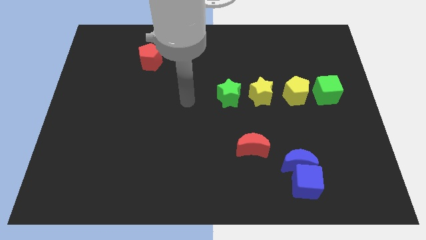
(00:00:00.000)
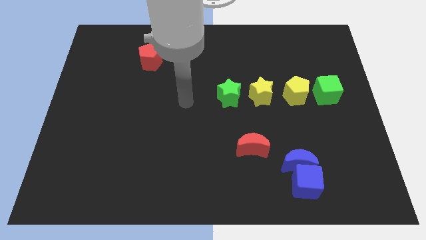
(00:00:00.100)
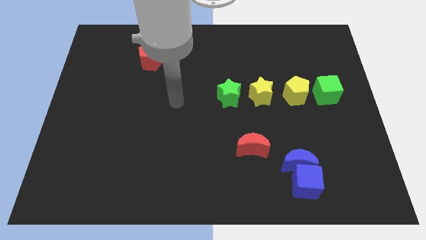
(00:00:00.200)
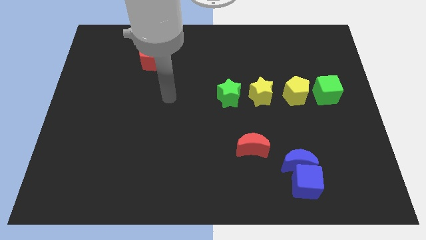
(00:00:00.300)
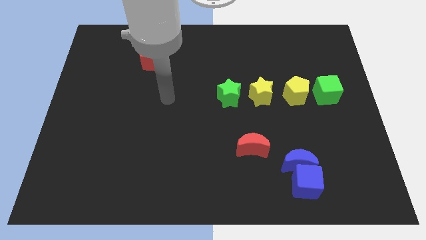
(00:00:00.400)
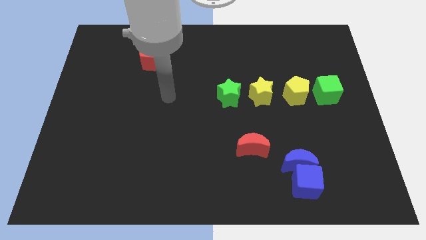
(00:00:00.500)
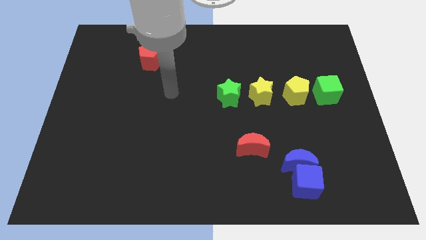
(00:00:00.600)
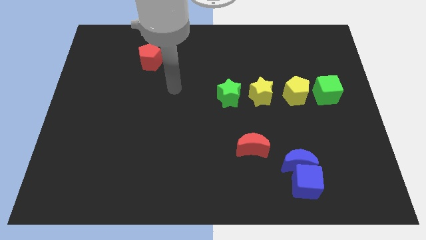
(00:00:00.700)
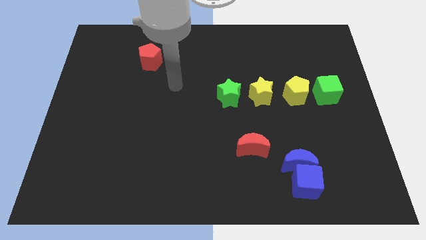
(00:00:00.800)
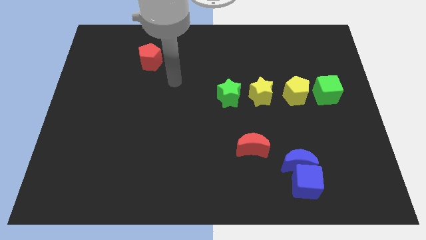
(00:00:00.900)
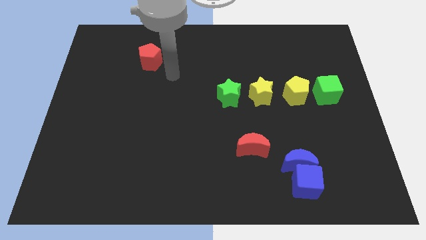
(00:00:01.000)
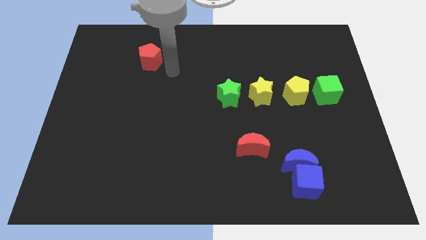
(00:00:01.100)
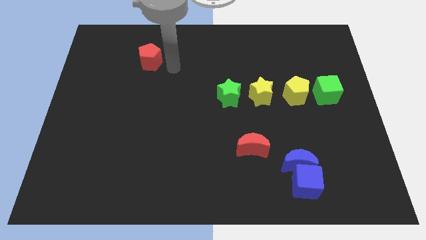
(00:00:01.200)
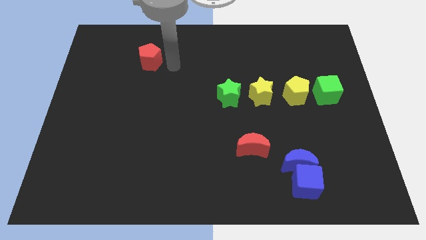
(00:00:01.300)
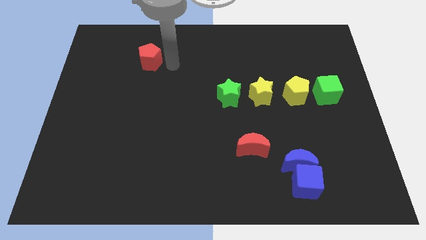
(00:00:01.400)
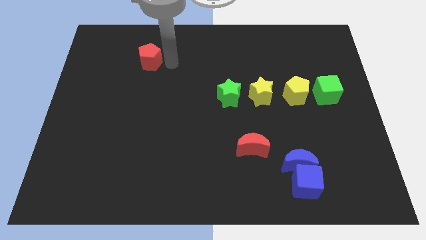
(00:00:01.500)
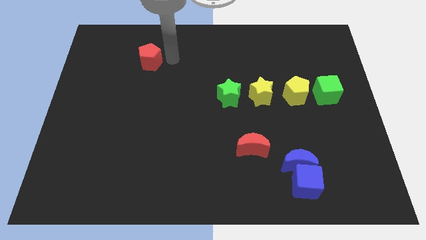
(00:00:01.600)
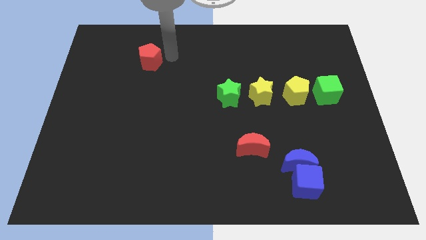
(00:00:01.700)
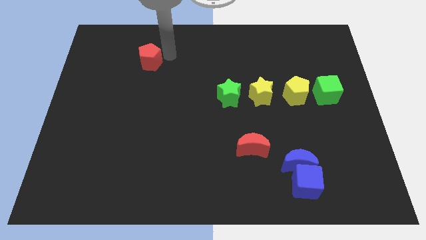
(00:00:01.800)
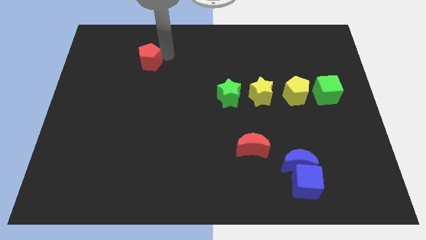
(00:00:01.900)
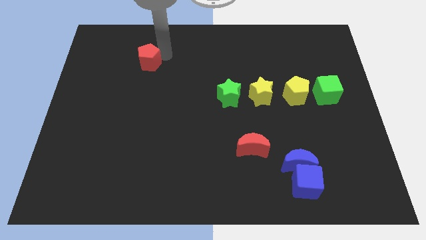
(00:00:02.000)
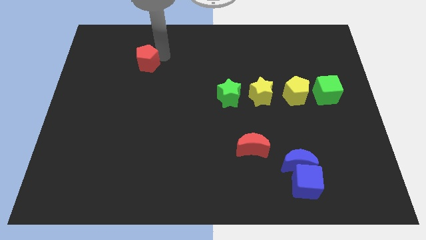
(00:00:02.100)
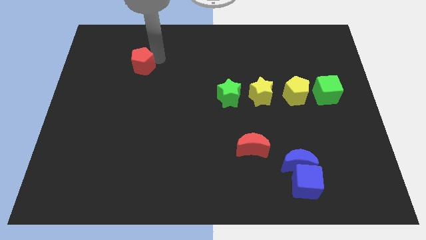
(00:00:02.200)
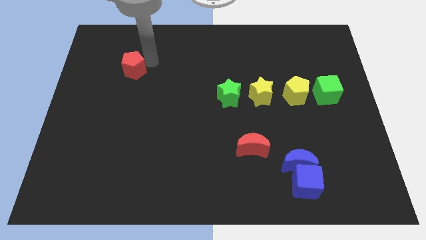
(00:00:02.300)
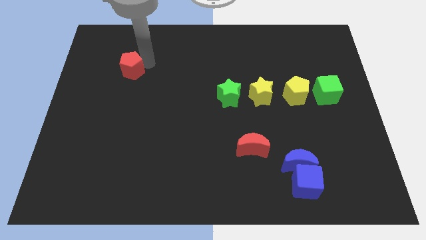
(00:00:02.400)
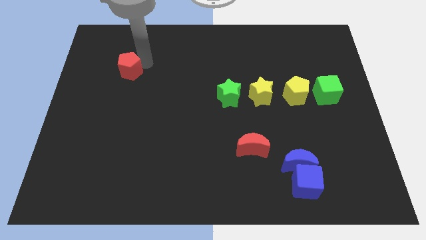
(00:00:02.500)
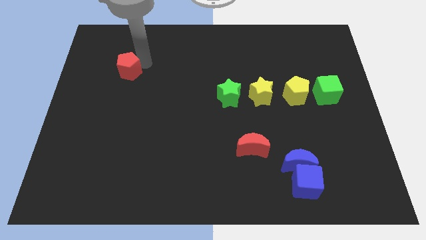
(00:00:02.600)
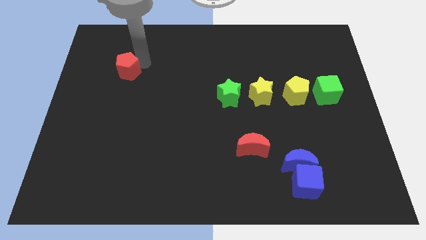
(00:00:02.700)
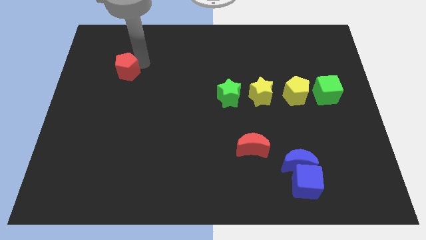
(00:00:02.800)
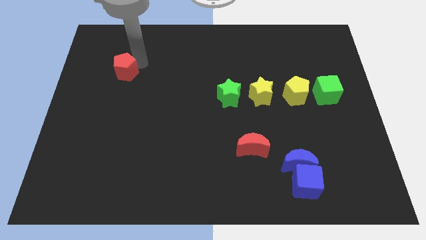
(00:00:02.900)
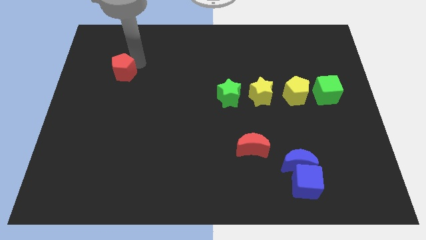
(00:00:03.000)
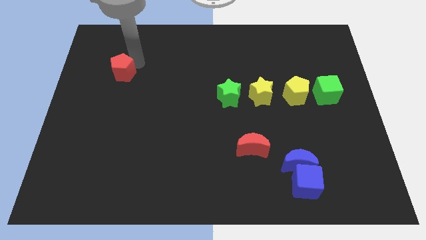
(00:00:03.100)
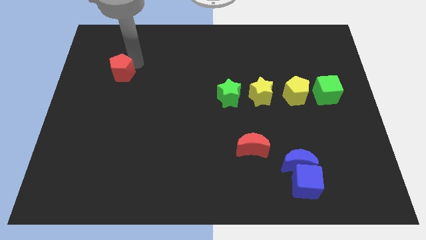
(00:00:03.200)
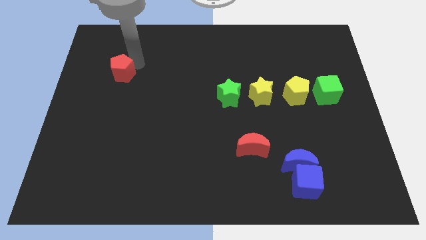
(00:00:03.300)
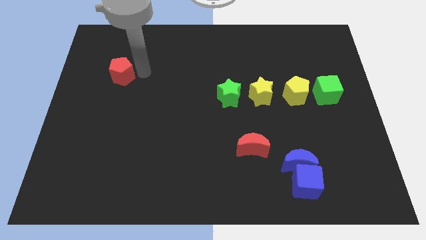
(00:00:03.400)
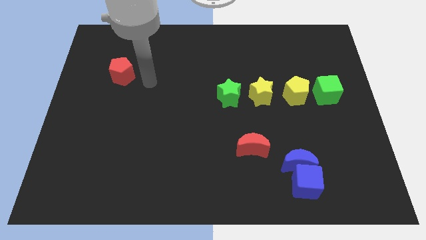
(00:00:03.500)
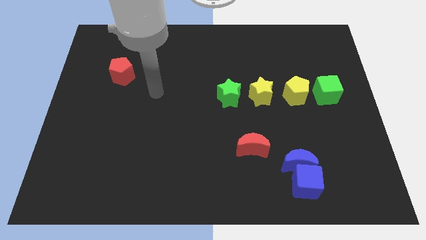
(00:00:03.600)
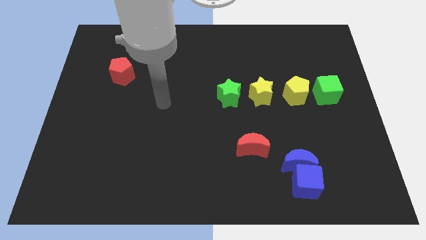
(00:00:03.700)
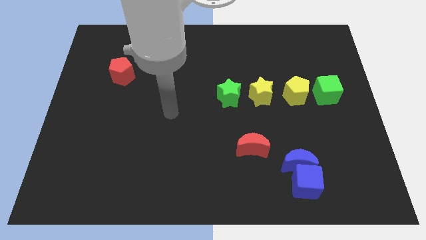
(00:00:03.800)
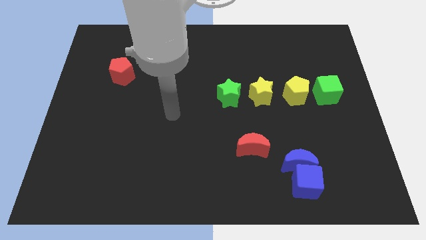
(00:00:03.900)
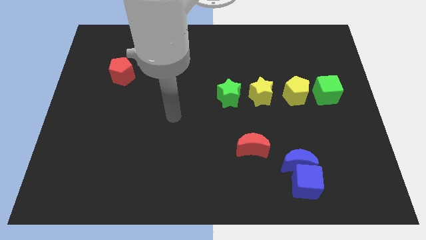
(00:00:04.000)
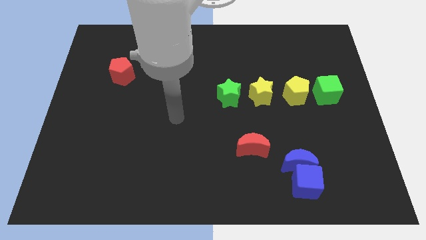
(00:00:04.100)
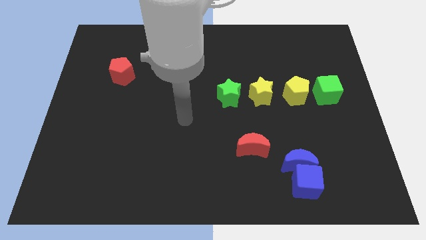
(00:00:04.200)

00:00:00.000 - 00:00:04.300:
move the red pentagon slightly to the left side of the board

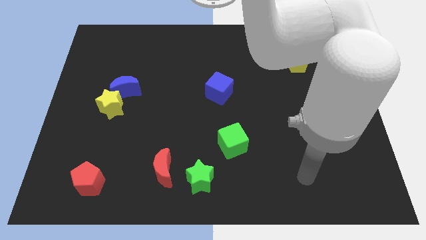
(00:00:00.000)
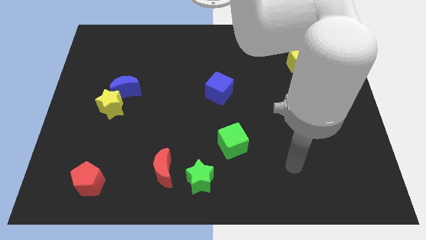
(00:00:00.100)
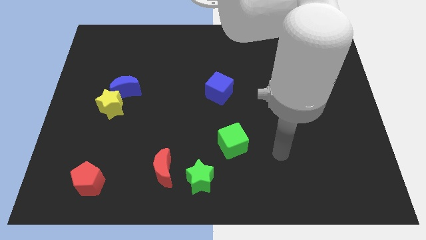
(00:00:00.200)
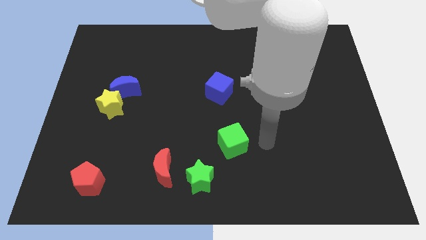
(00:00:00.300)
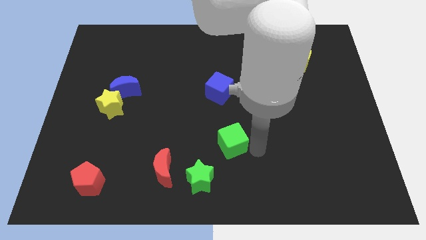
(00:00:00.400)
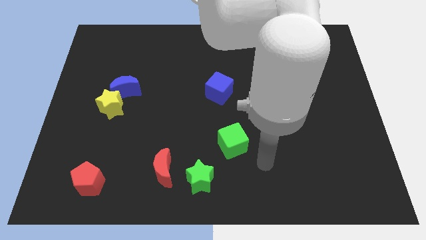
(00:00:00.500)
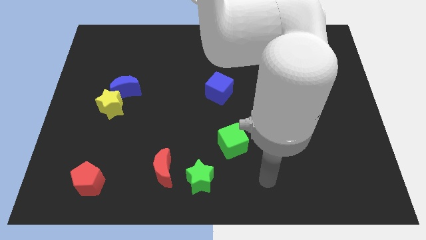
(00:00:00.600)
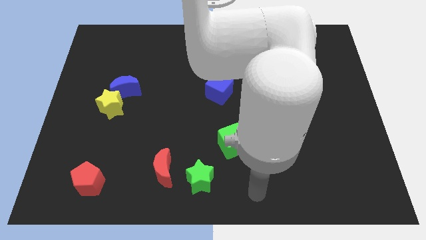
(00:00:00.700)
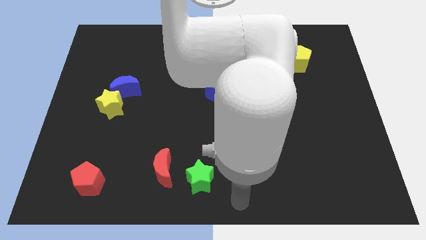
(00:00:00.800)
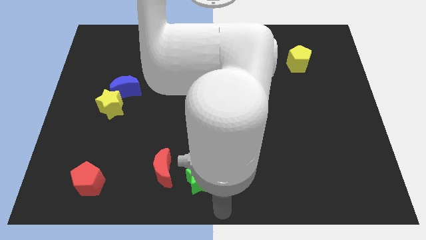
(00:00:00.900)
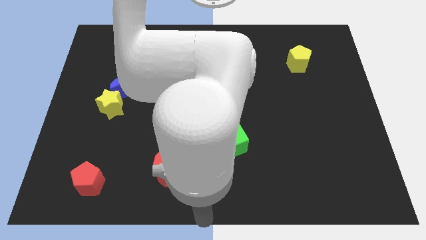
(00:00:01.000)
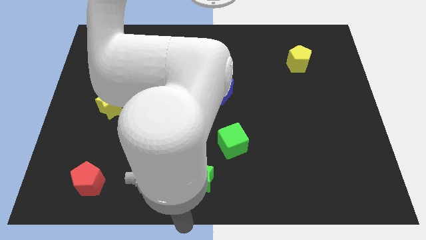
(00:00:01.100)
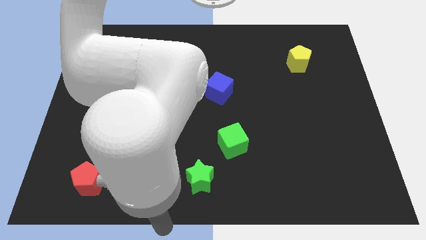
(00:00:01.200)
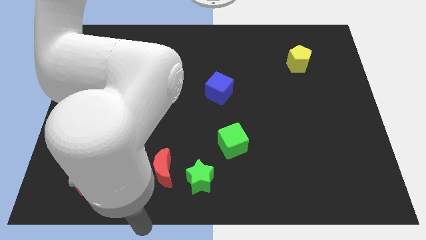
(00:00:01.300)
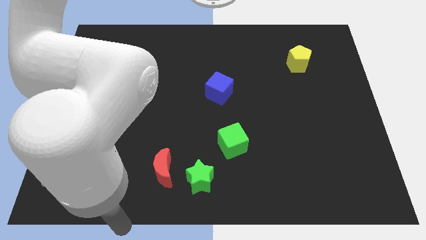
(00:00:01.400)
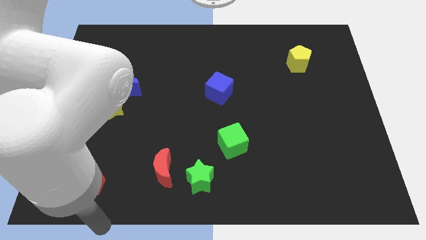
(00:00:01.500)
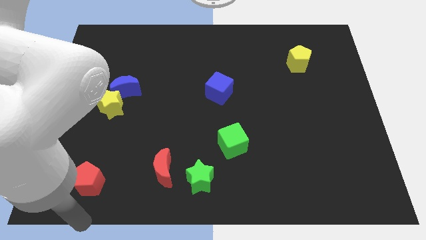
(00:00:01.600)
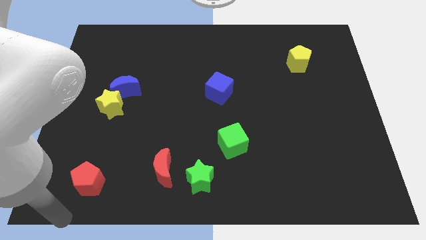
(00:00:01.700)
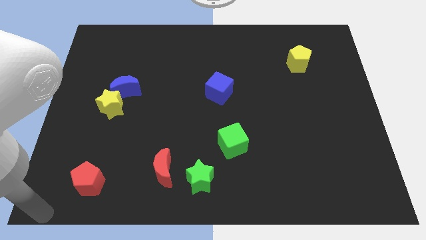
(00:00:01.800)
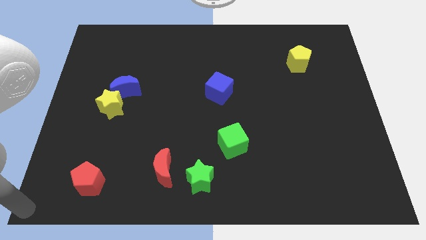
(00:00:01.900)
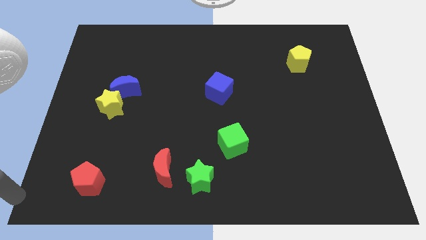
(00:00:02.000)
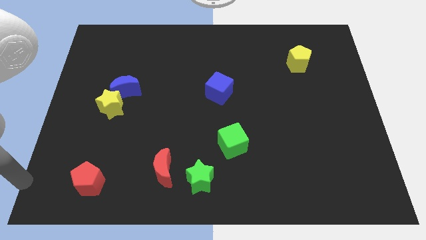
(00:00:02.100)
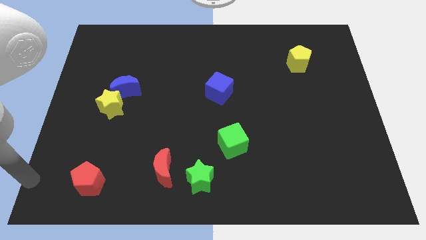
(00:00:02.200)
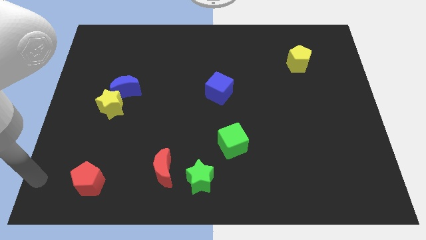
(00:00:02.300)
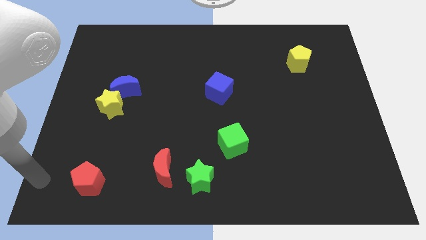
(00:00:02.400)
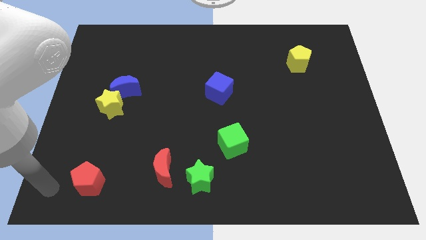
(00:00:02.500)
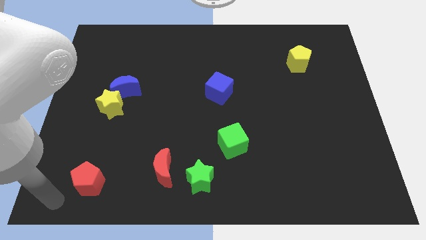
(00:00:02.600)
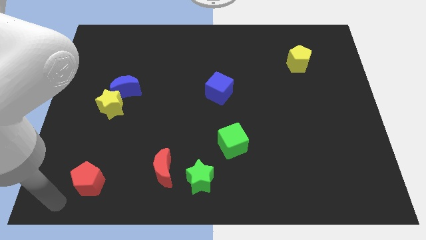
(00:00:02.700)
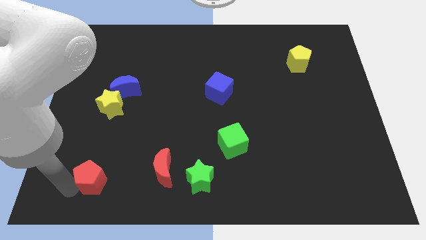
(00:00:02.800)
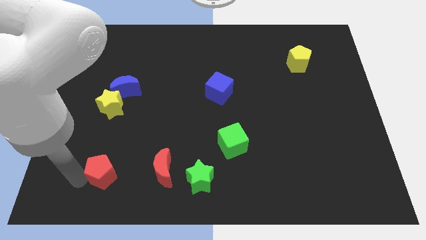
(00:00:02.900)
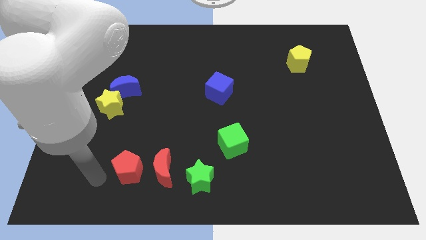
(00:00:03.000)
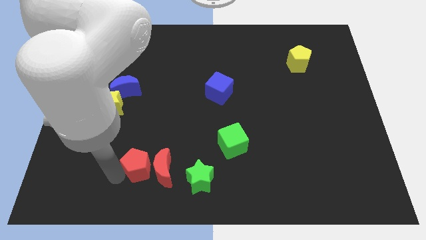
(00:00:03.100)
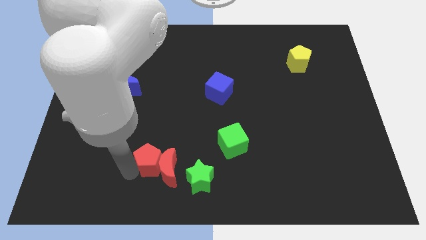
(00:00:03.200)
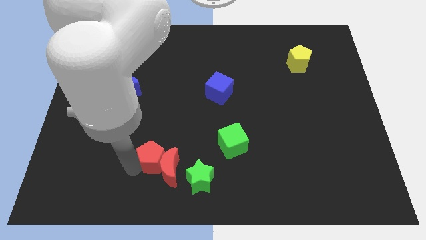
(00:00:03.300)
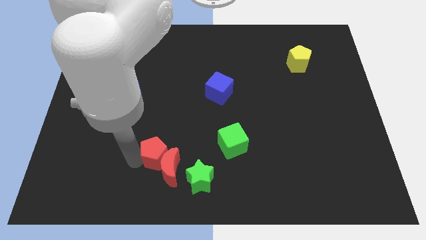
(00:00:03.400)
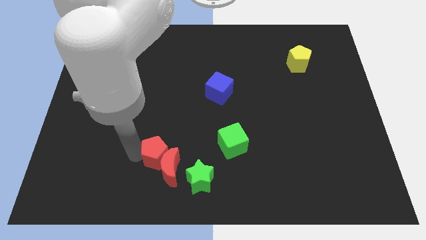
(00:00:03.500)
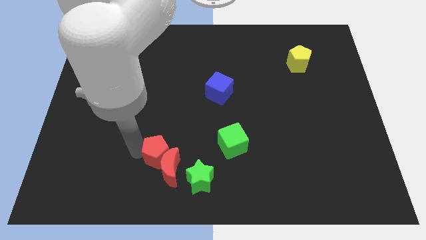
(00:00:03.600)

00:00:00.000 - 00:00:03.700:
push the red pentagon into the red crescent

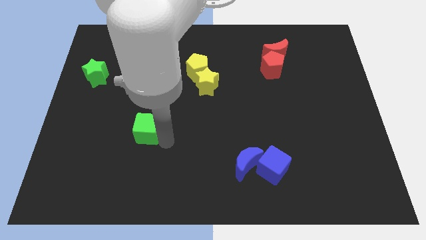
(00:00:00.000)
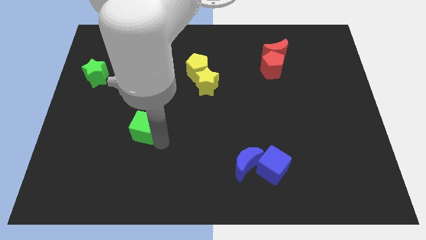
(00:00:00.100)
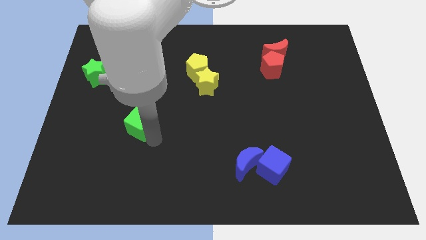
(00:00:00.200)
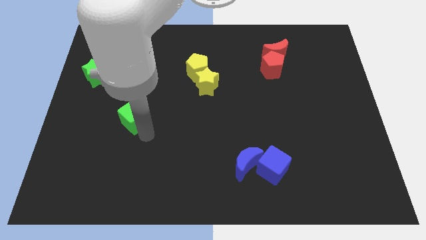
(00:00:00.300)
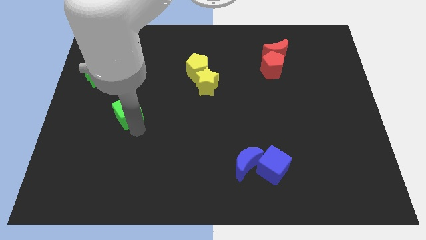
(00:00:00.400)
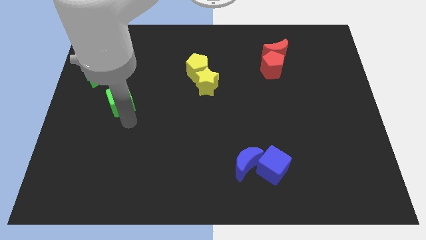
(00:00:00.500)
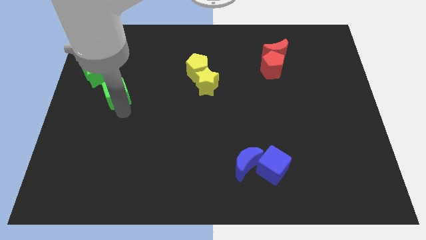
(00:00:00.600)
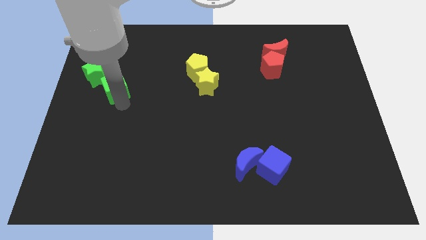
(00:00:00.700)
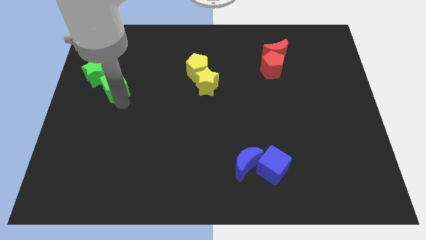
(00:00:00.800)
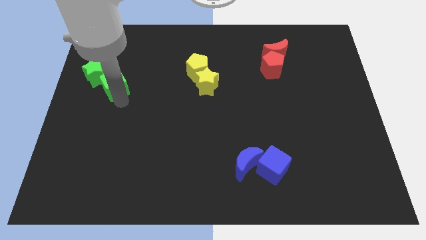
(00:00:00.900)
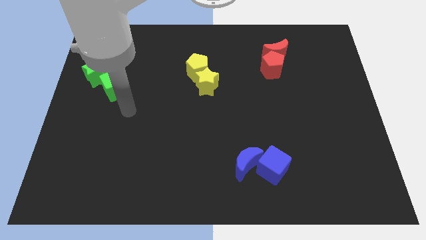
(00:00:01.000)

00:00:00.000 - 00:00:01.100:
add green cube into green star

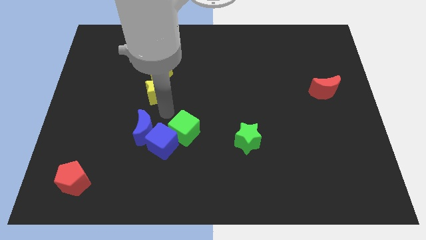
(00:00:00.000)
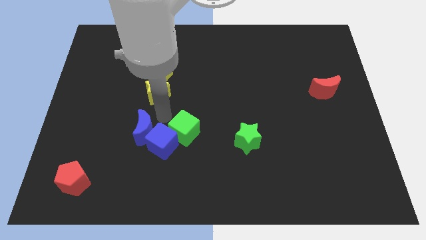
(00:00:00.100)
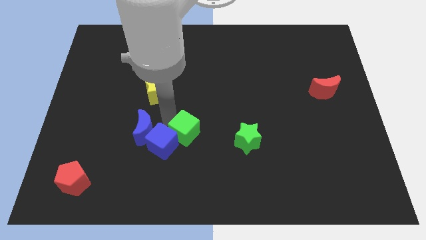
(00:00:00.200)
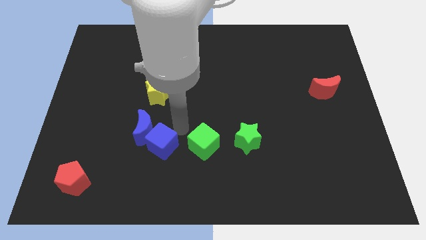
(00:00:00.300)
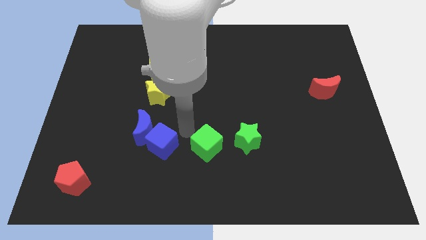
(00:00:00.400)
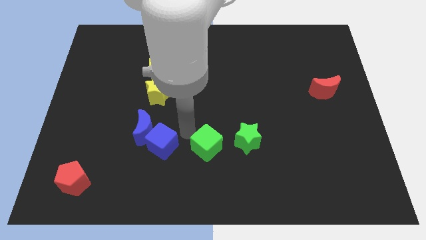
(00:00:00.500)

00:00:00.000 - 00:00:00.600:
separate the green cube from the blue cube
